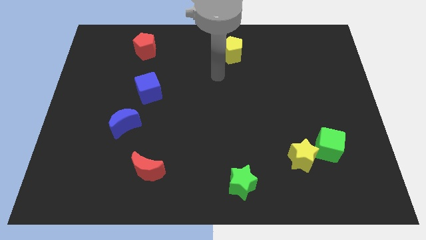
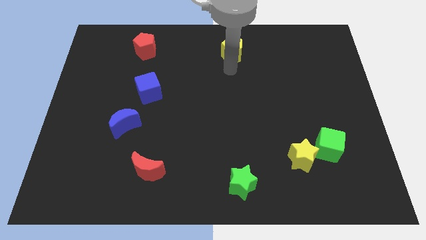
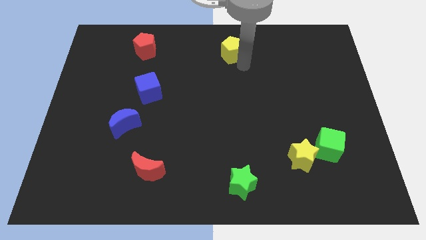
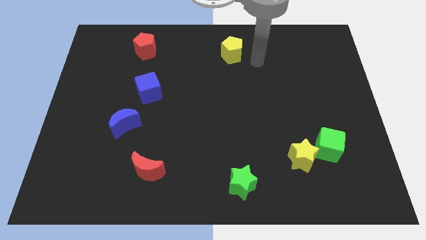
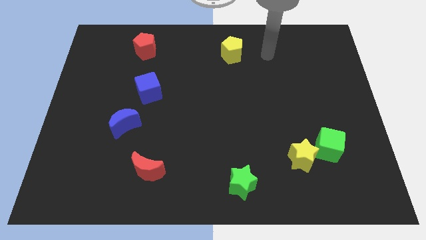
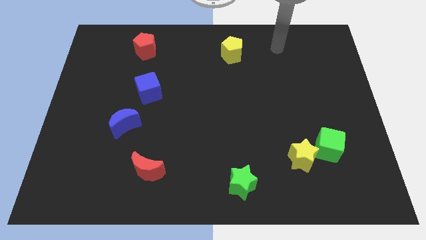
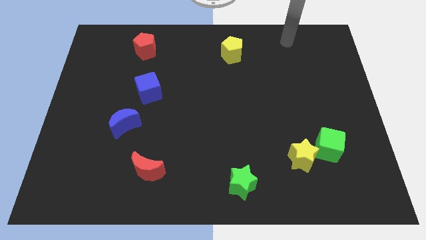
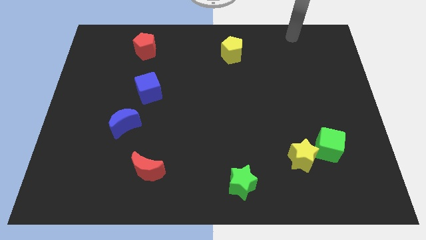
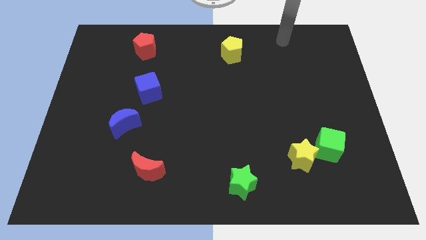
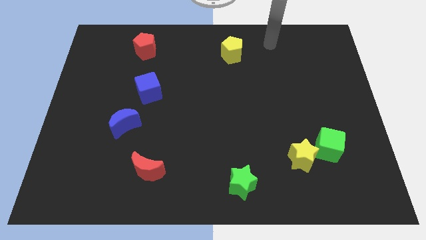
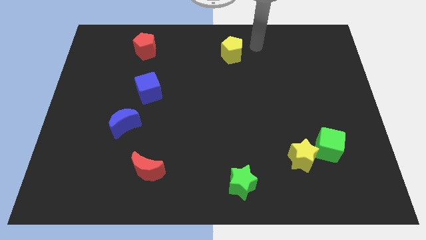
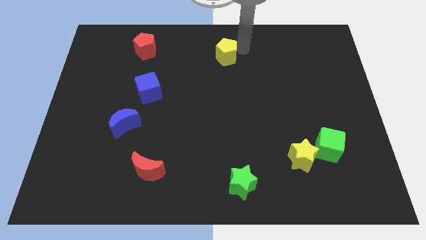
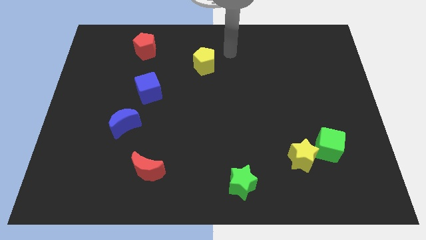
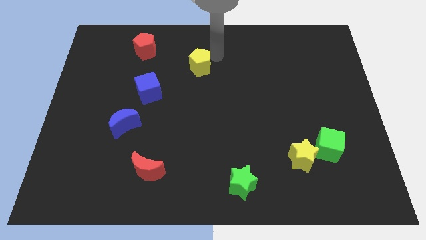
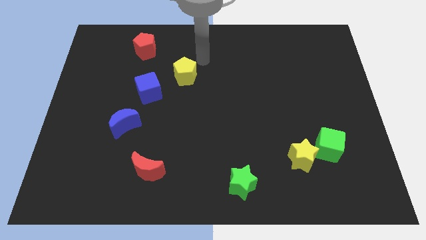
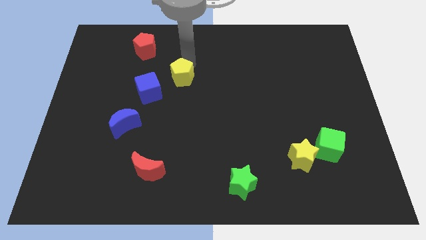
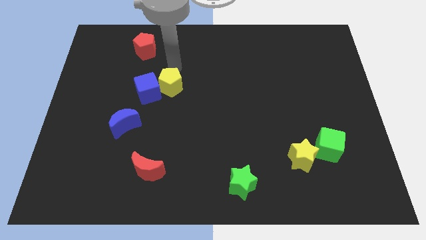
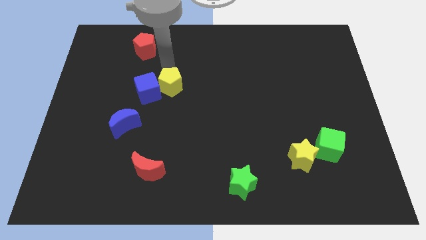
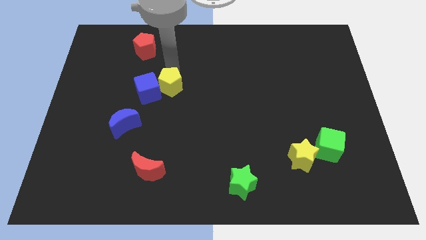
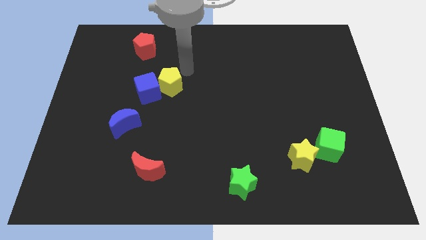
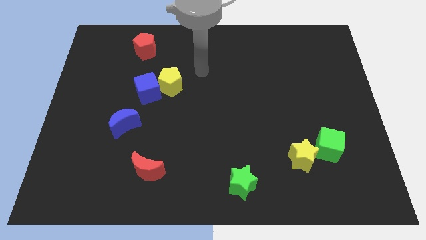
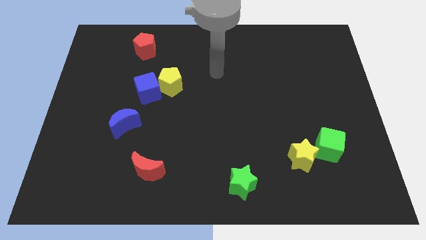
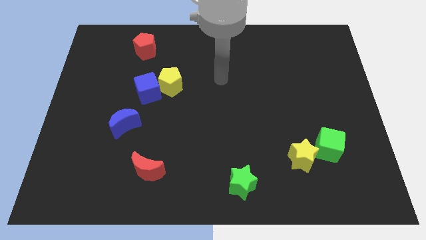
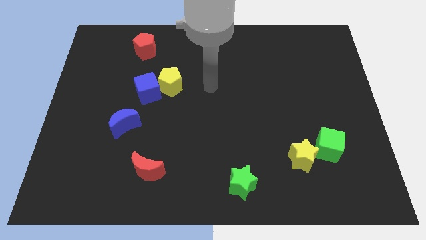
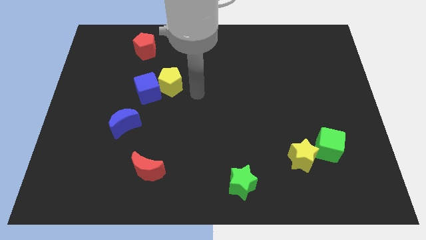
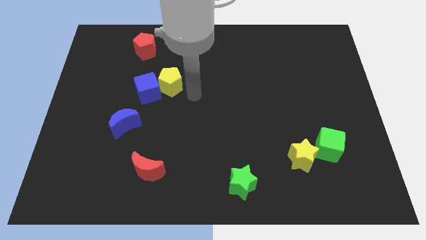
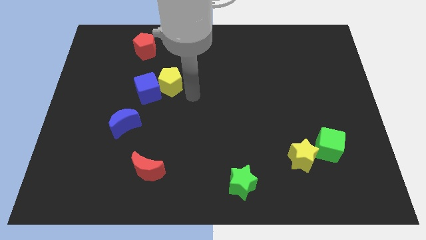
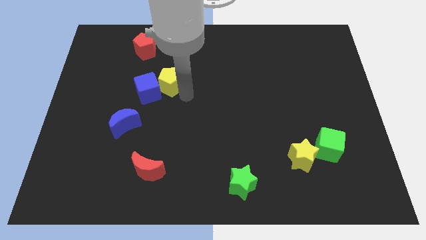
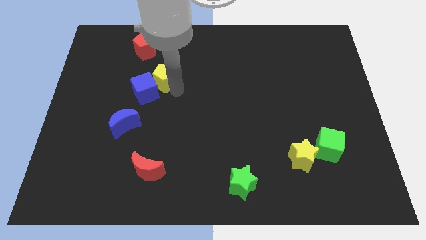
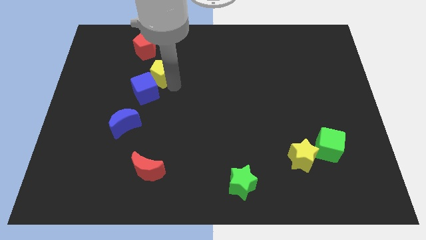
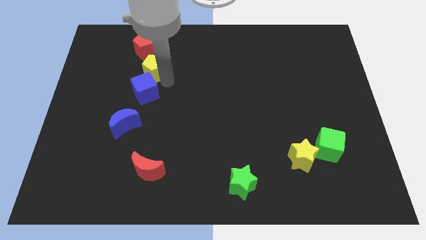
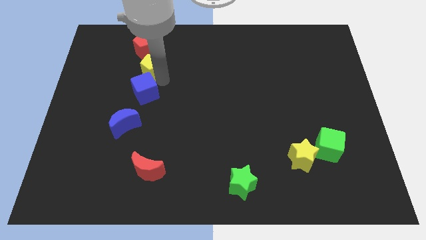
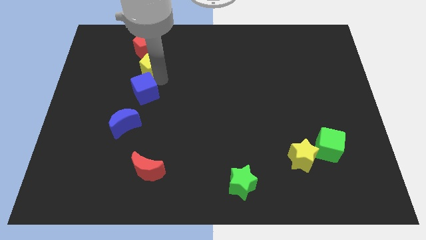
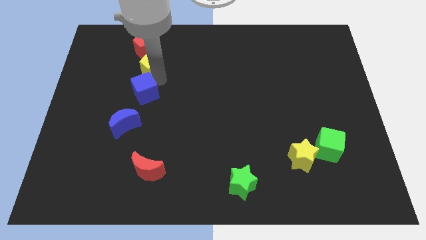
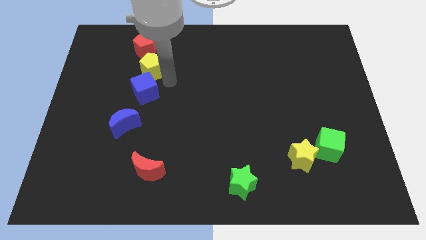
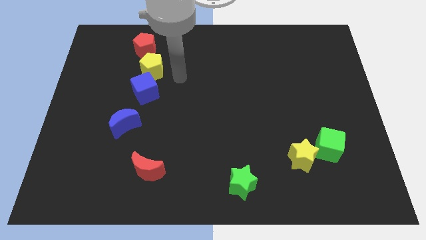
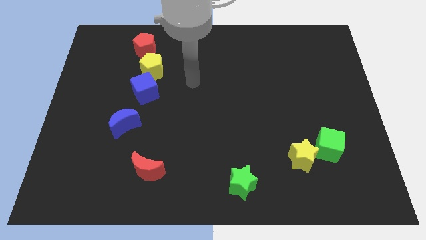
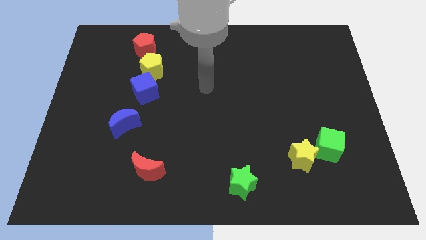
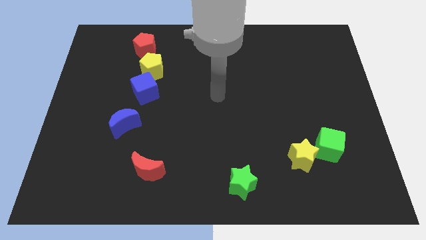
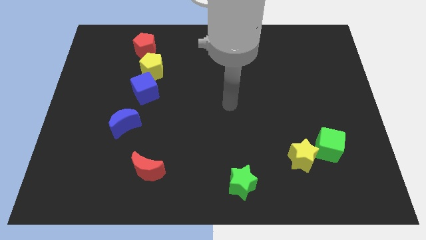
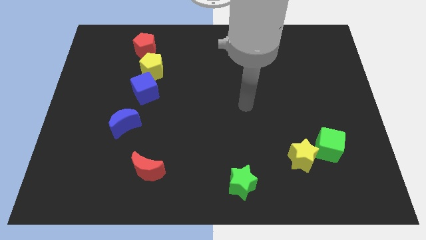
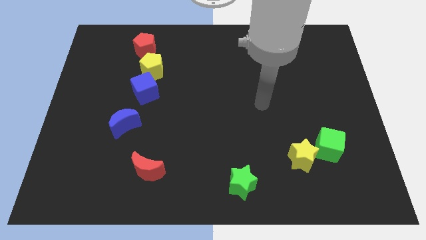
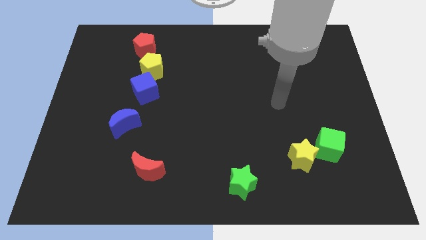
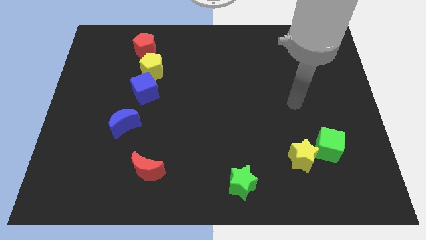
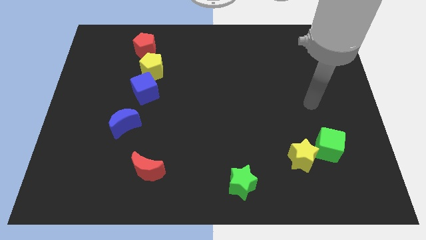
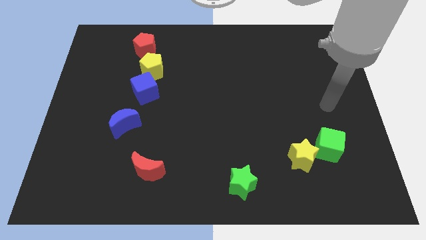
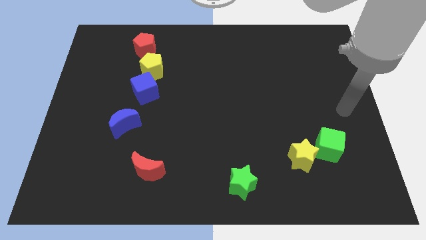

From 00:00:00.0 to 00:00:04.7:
place yellow pentagon in between the blue cube and the red pentagon

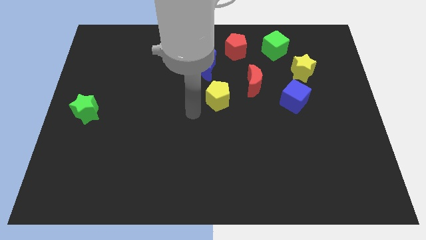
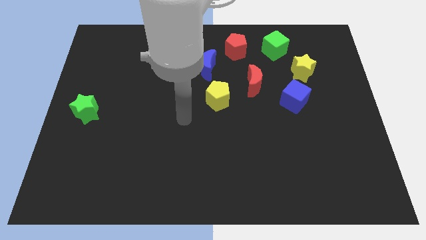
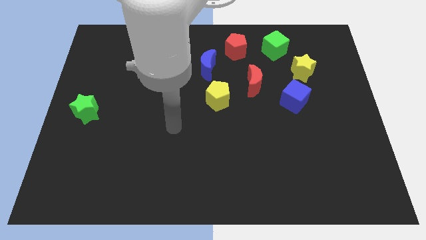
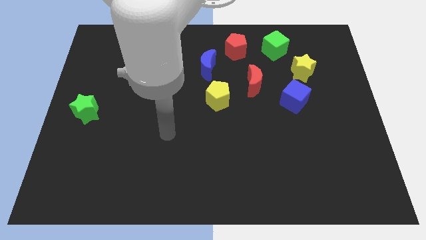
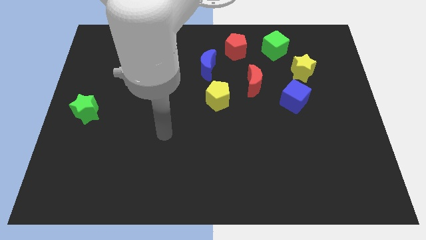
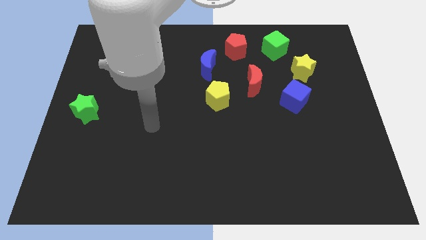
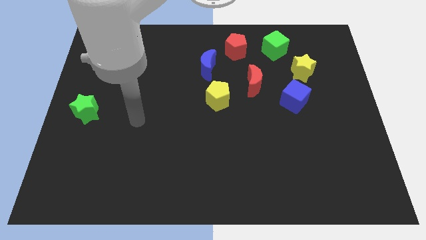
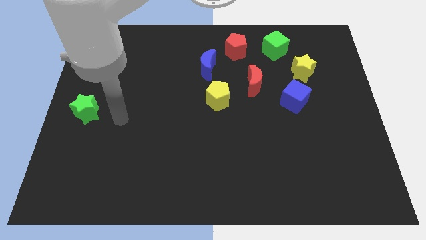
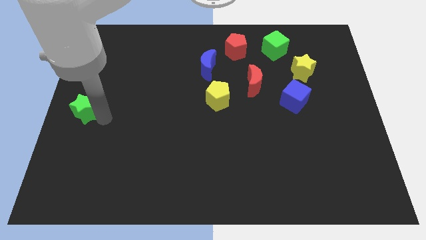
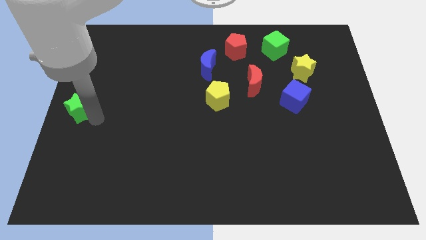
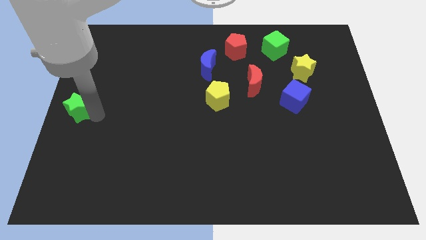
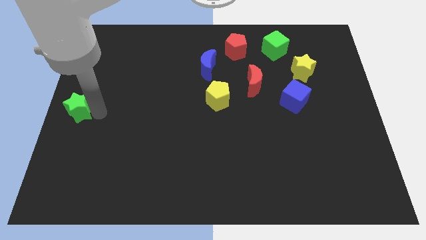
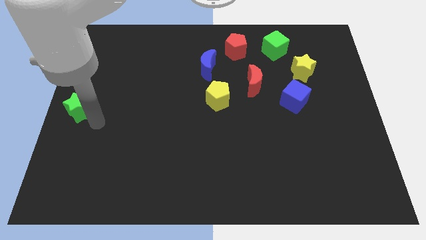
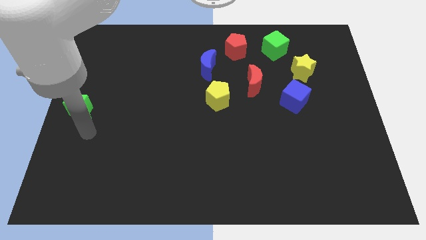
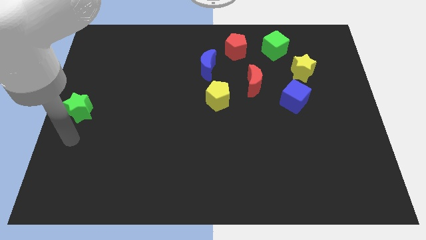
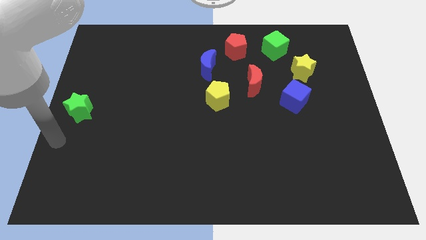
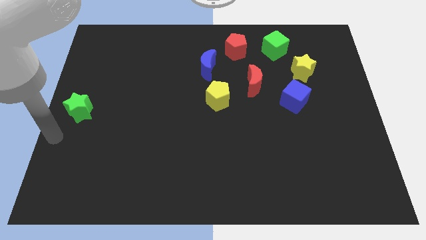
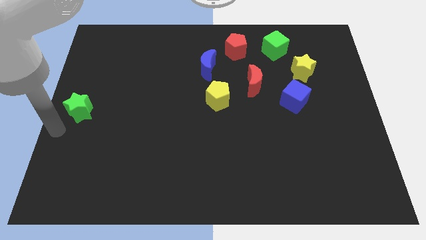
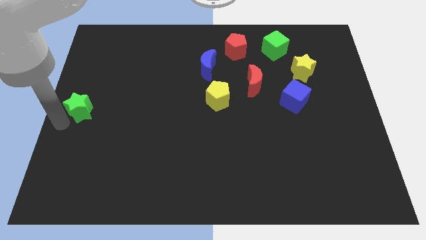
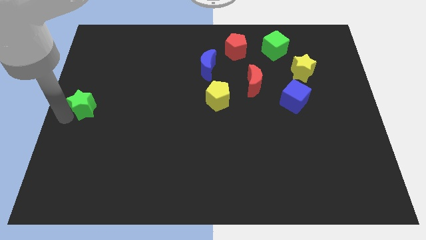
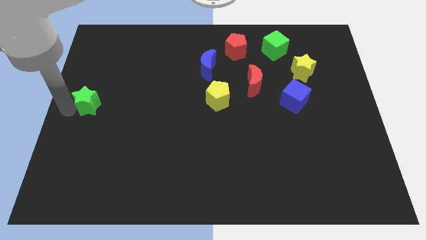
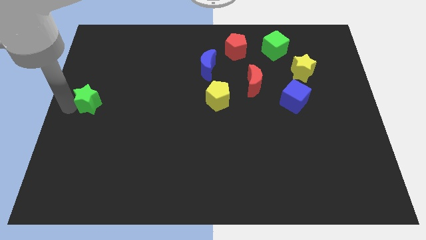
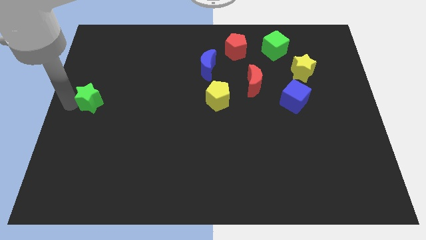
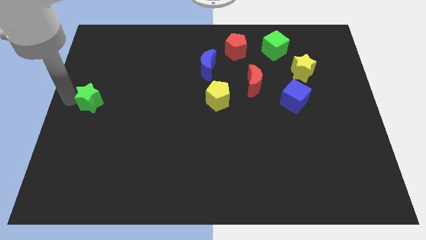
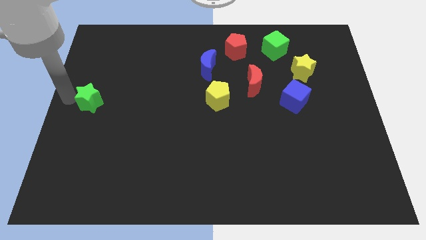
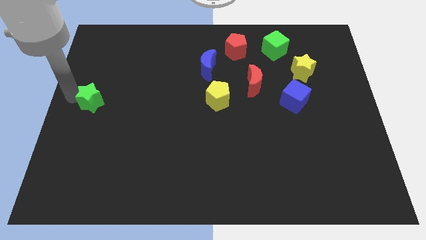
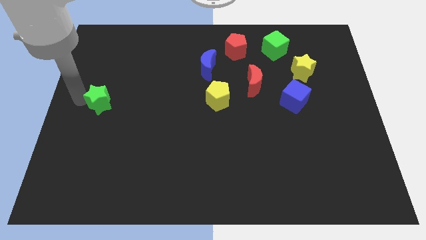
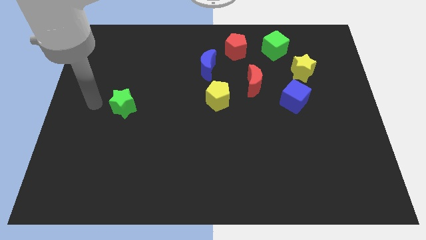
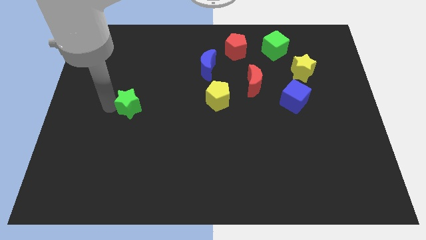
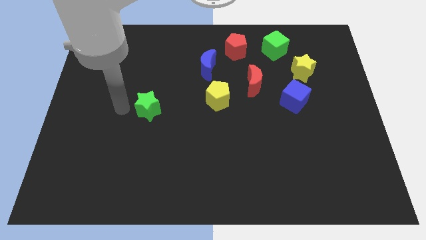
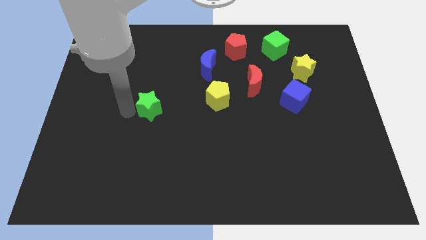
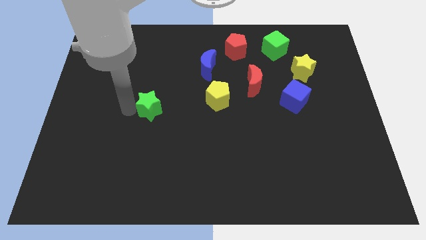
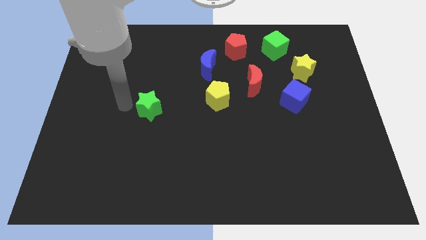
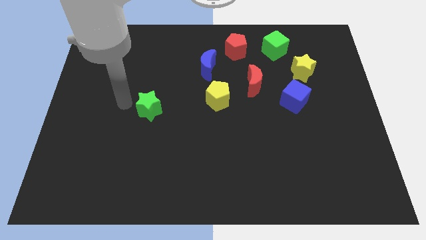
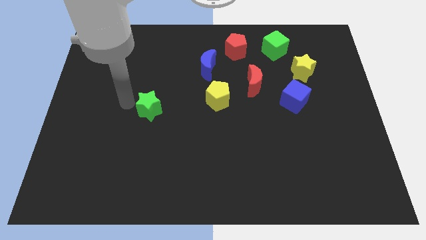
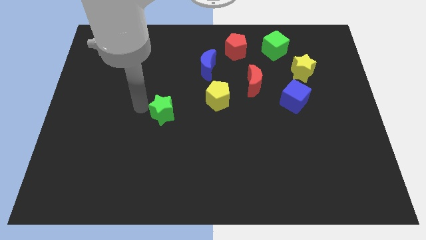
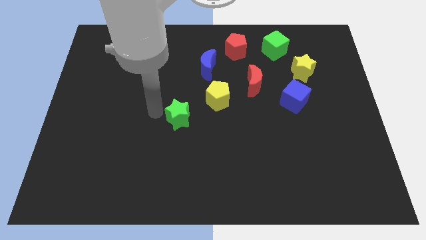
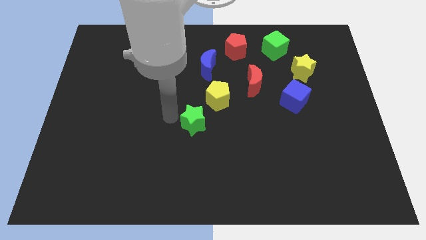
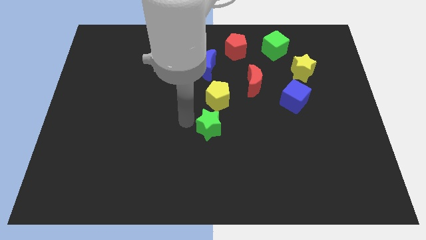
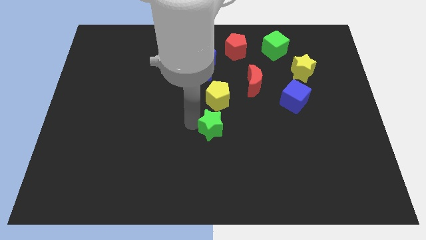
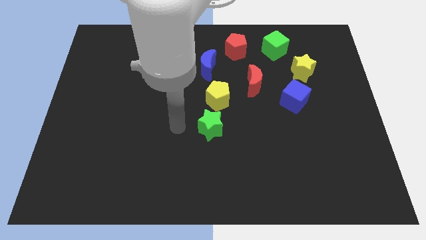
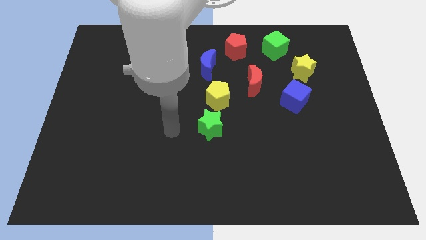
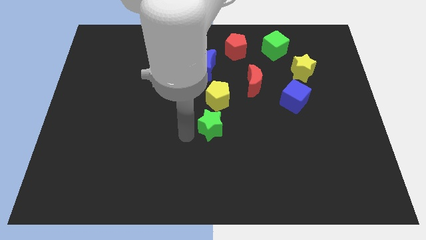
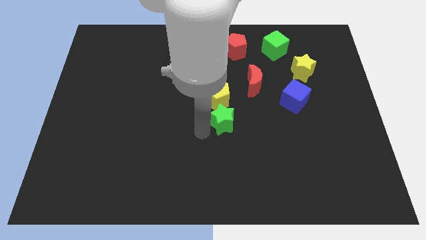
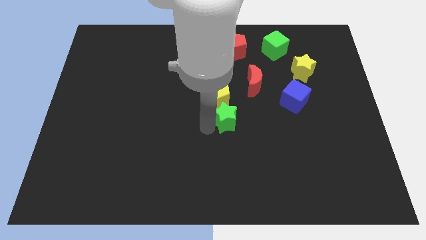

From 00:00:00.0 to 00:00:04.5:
move the green star to the bottom of the yellow star
